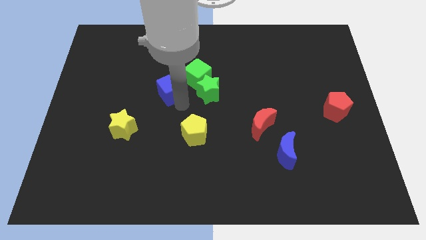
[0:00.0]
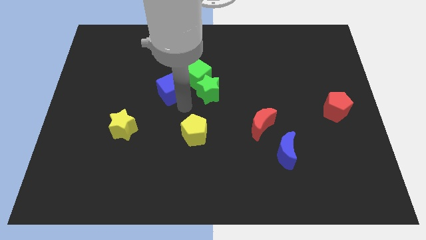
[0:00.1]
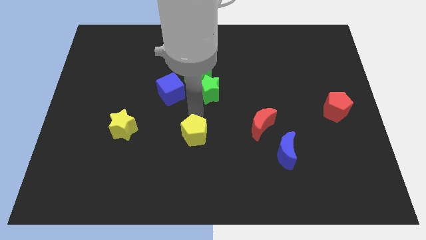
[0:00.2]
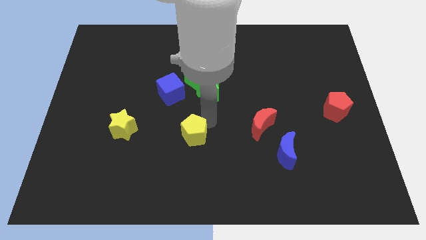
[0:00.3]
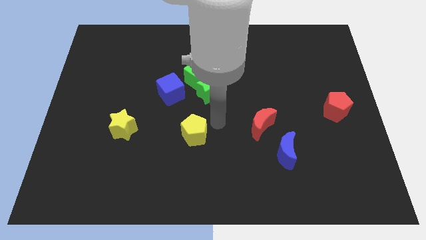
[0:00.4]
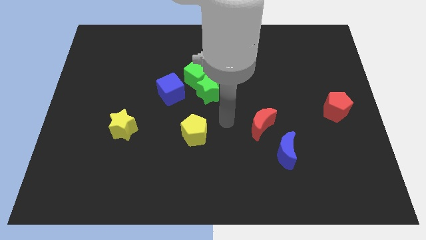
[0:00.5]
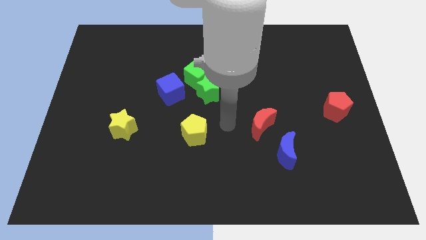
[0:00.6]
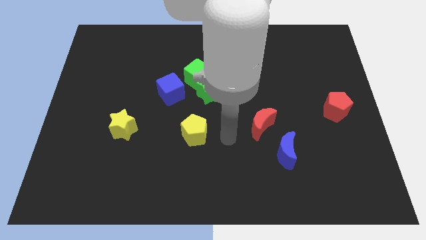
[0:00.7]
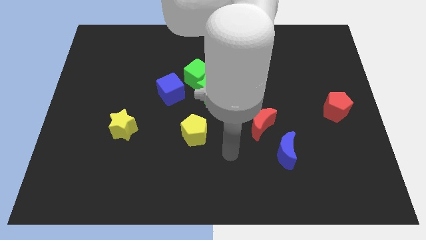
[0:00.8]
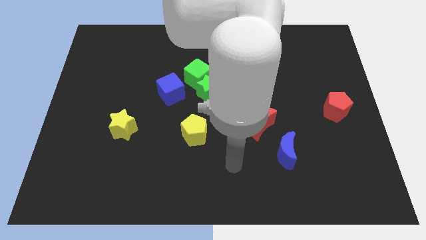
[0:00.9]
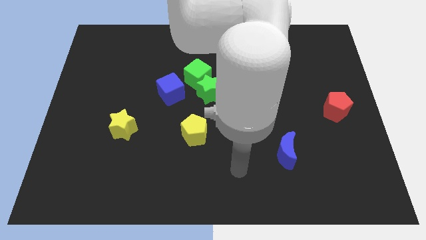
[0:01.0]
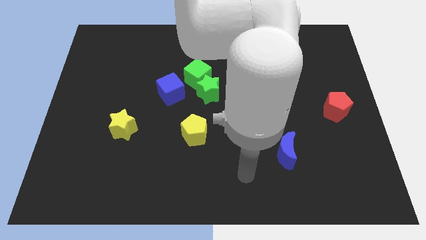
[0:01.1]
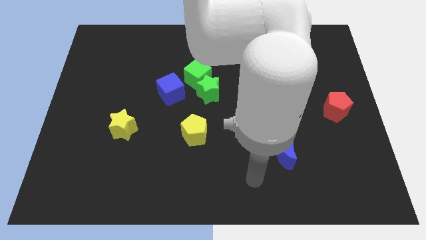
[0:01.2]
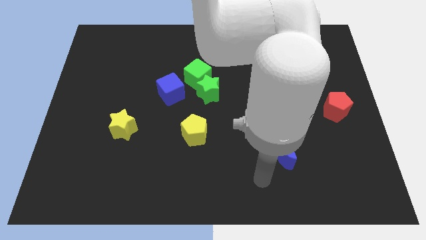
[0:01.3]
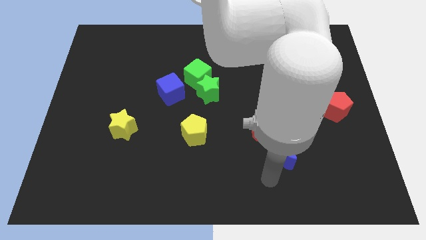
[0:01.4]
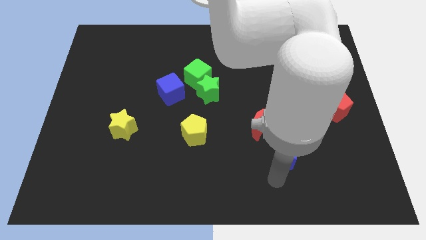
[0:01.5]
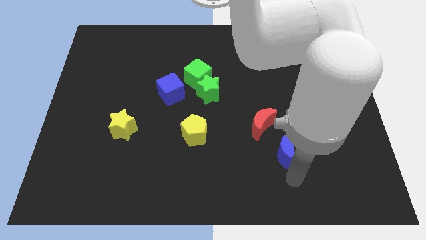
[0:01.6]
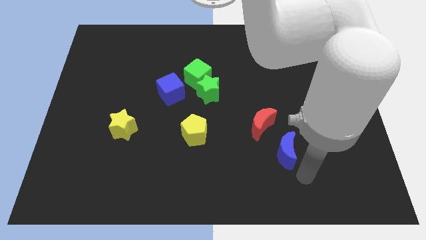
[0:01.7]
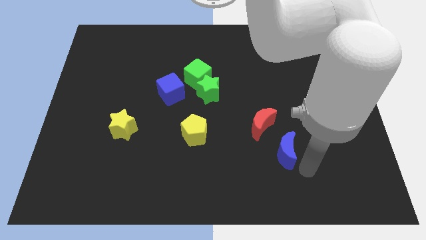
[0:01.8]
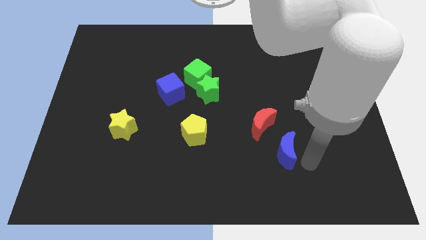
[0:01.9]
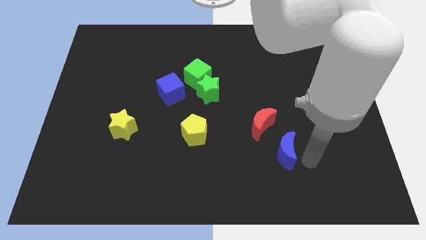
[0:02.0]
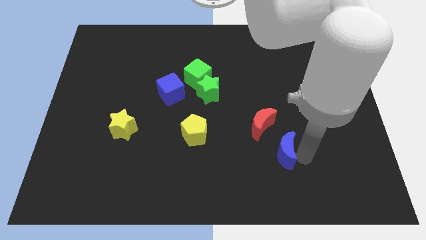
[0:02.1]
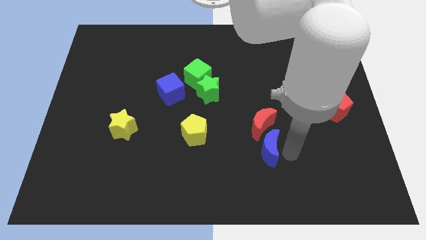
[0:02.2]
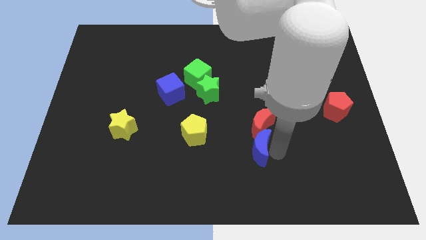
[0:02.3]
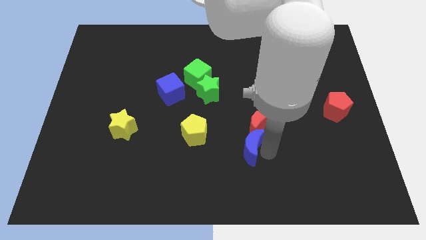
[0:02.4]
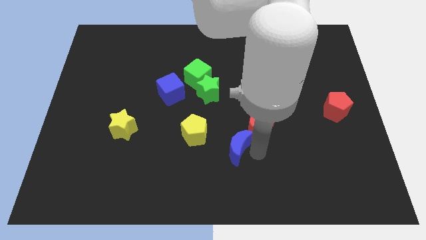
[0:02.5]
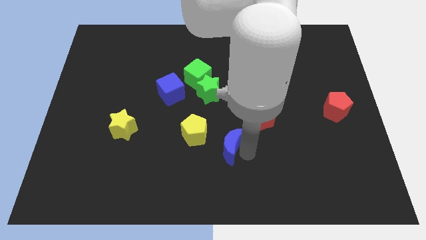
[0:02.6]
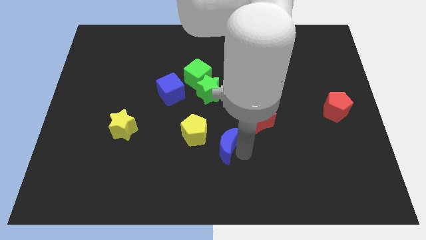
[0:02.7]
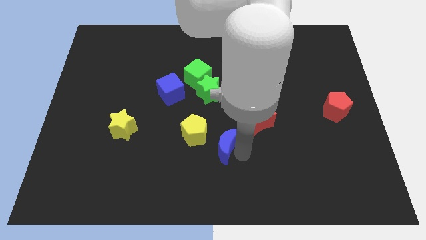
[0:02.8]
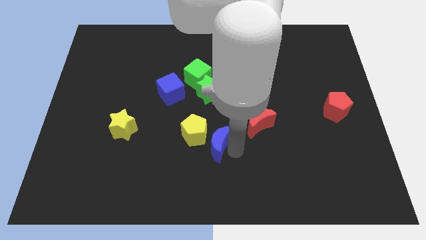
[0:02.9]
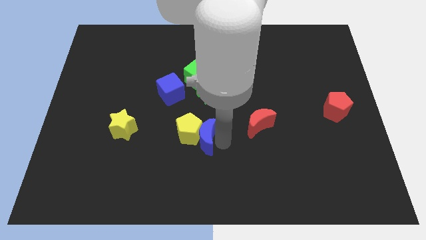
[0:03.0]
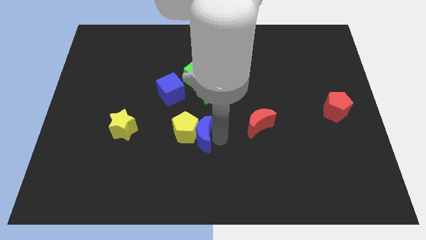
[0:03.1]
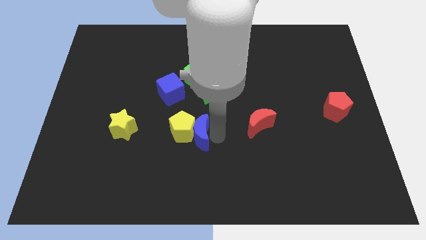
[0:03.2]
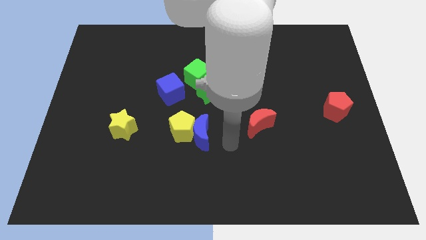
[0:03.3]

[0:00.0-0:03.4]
push the blue moon into the yellow pentagon

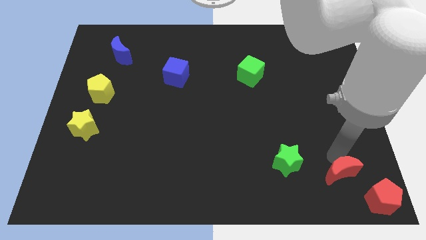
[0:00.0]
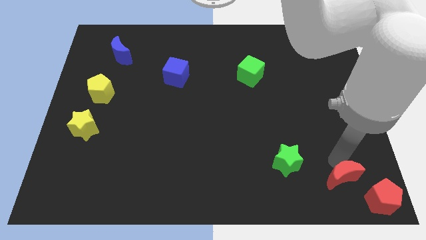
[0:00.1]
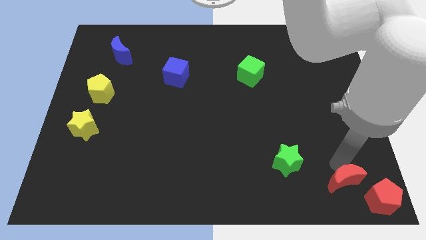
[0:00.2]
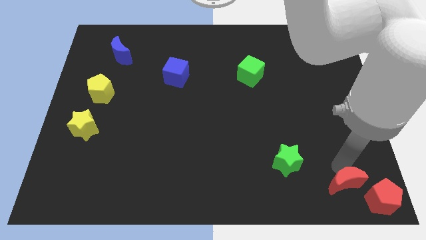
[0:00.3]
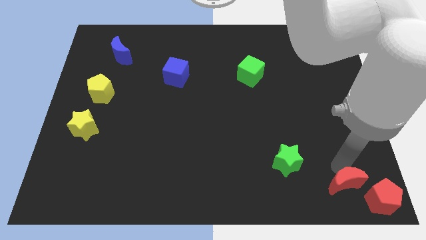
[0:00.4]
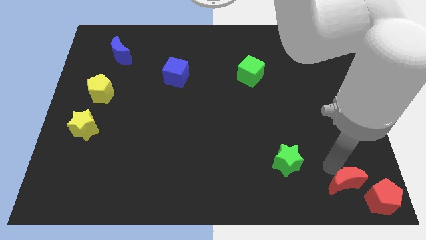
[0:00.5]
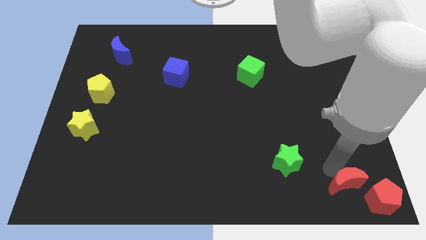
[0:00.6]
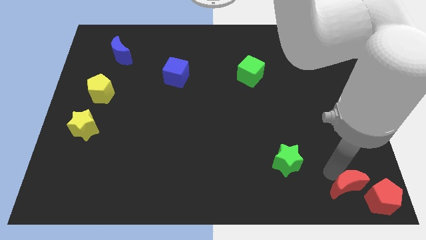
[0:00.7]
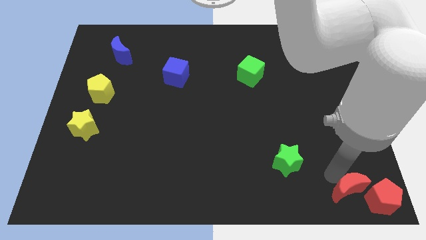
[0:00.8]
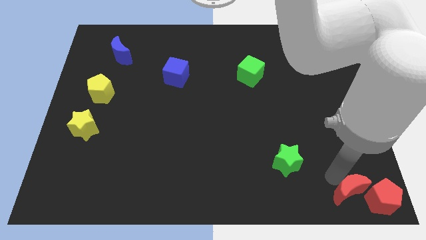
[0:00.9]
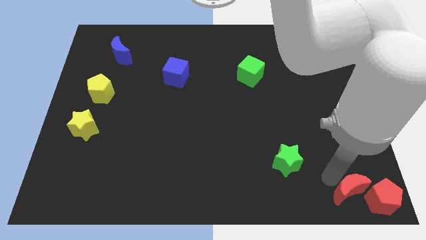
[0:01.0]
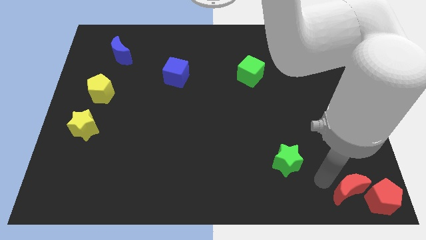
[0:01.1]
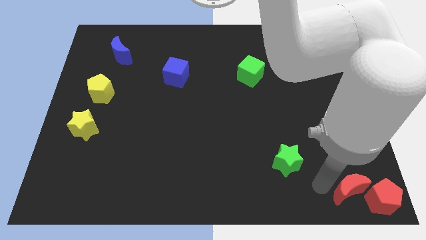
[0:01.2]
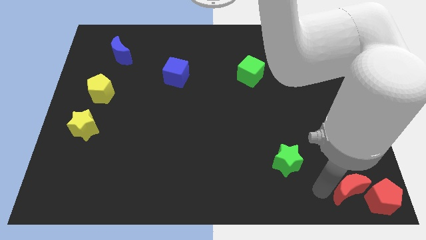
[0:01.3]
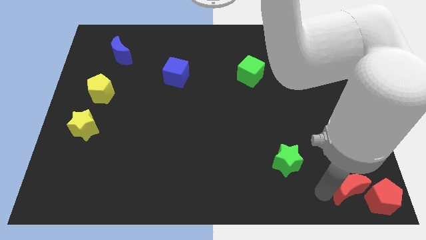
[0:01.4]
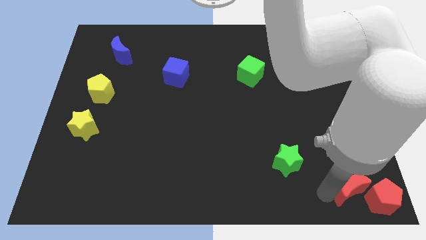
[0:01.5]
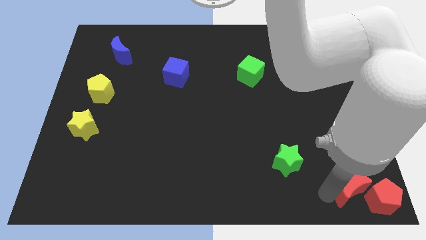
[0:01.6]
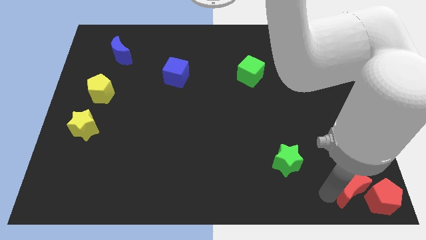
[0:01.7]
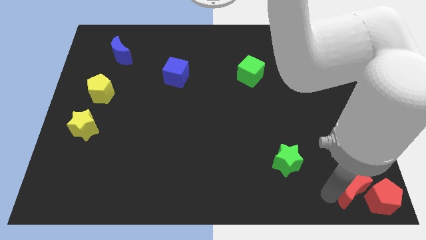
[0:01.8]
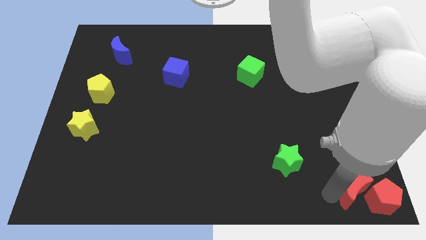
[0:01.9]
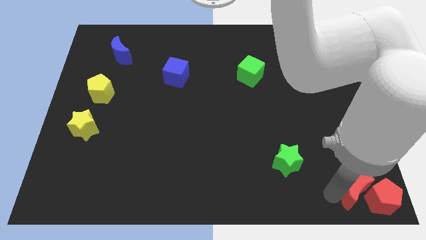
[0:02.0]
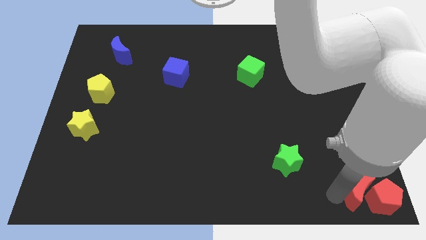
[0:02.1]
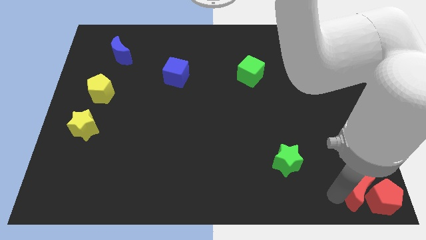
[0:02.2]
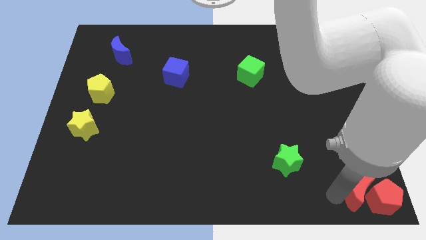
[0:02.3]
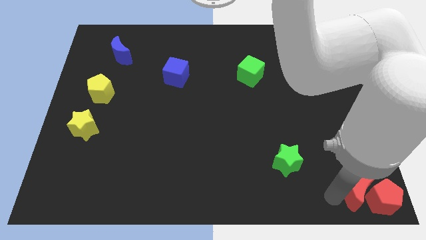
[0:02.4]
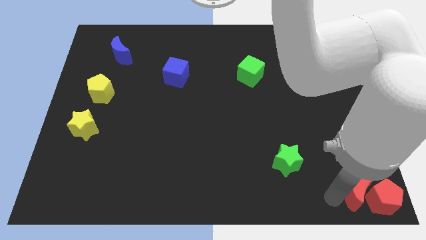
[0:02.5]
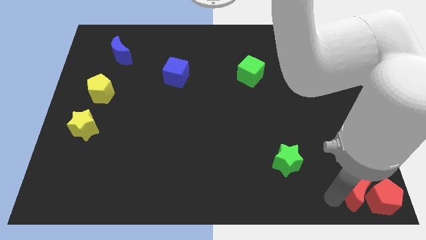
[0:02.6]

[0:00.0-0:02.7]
drag the red moon into the left side of the red pentagon

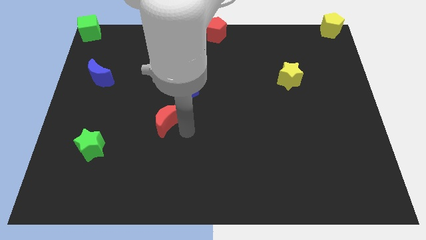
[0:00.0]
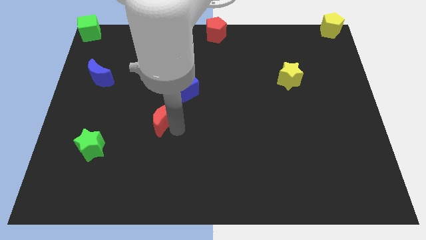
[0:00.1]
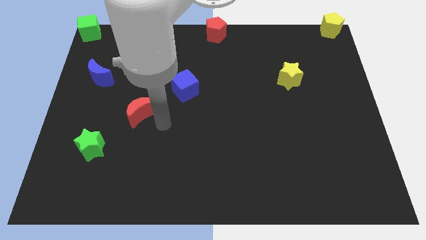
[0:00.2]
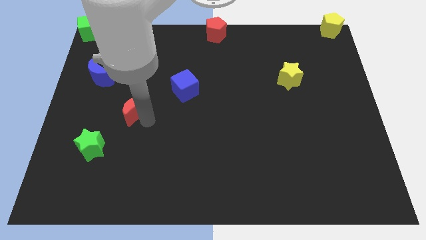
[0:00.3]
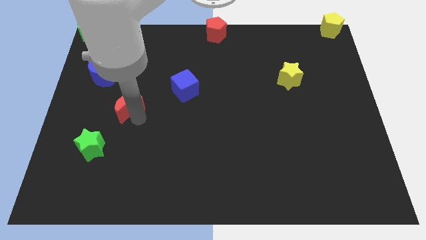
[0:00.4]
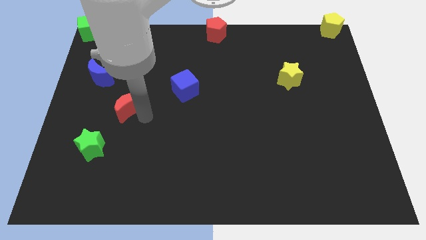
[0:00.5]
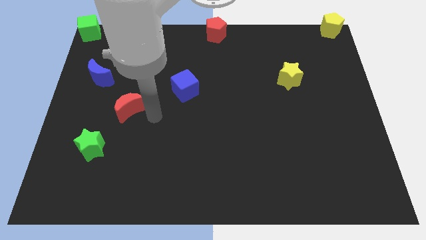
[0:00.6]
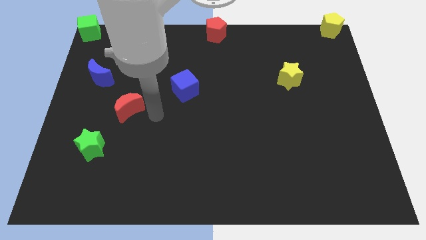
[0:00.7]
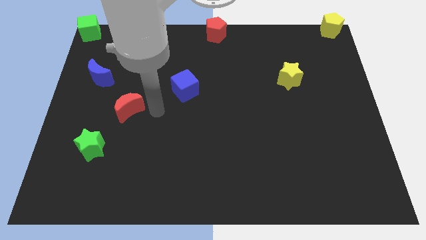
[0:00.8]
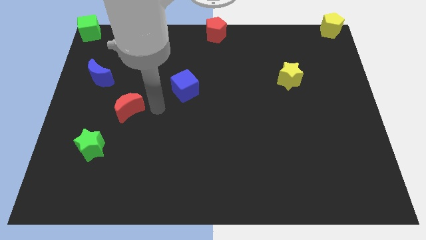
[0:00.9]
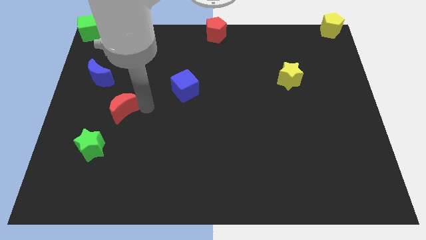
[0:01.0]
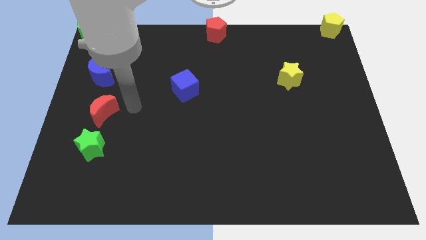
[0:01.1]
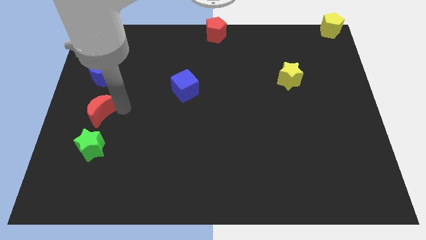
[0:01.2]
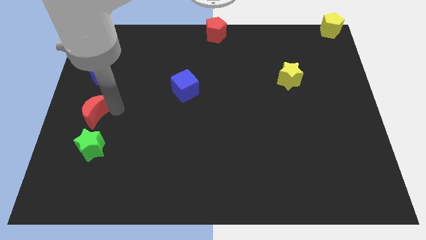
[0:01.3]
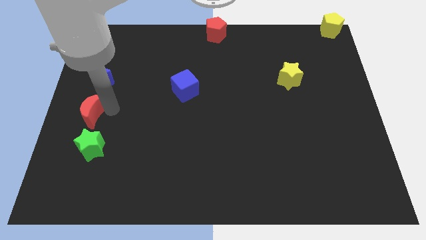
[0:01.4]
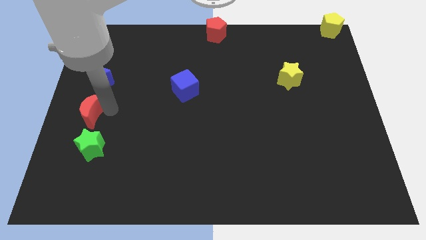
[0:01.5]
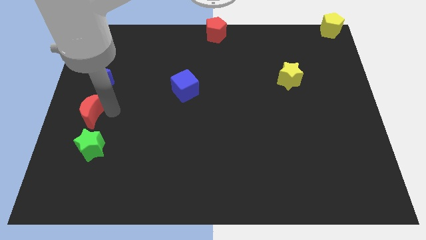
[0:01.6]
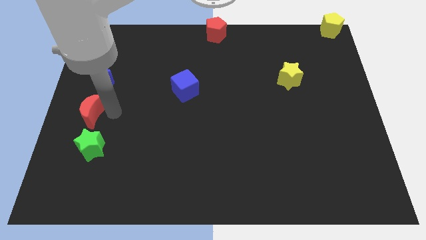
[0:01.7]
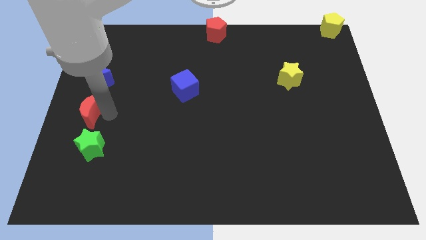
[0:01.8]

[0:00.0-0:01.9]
push the red crescent in between the green star and blue crescent

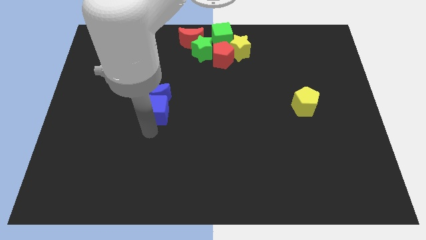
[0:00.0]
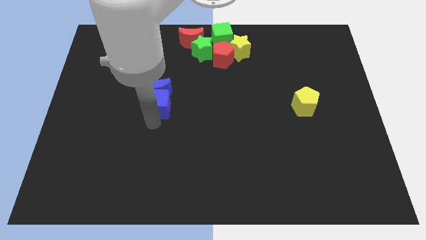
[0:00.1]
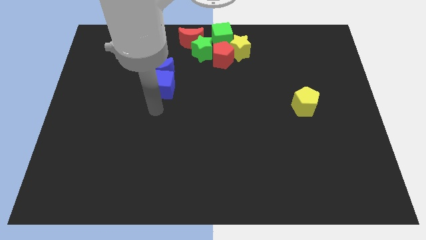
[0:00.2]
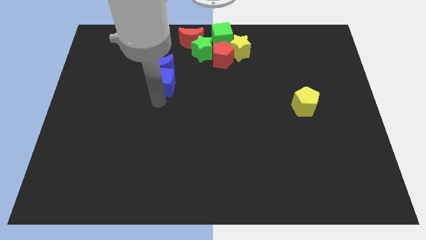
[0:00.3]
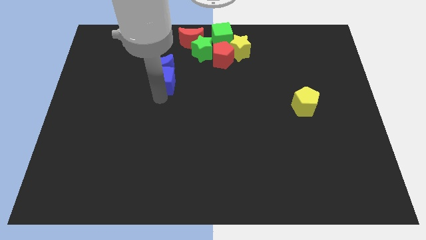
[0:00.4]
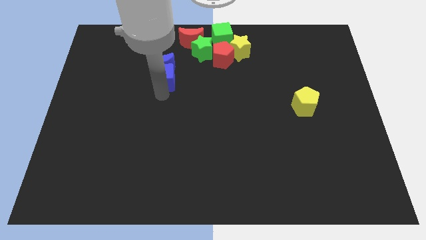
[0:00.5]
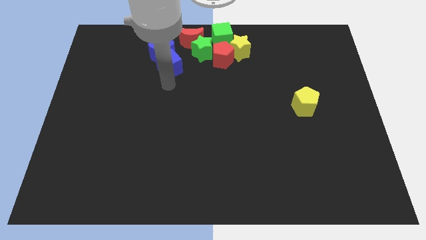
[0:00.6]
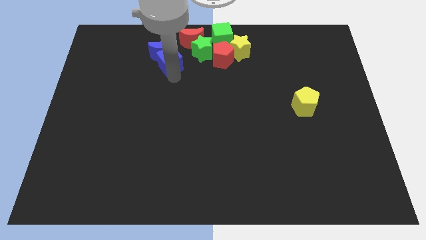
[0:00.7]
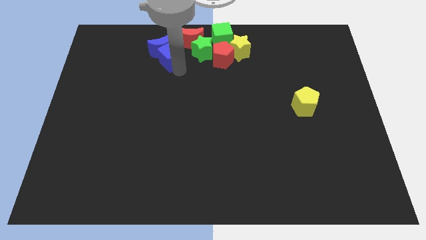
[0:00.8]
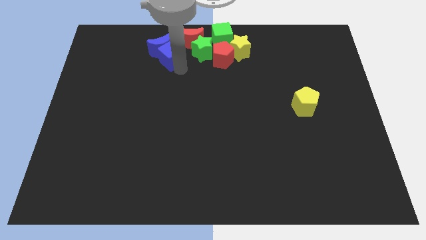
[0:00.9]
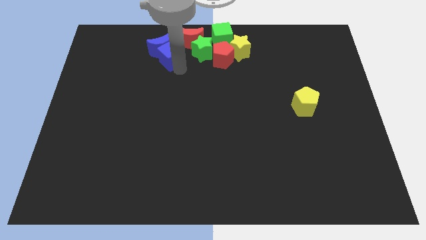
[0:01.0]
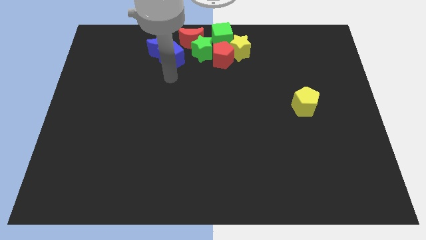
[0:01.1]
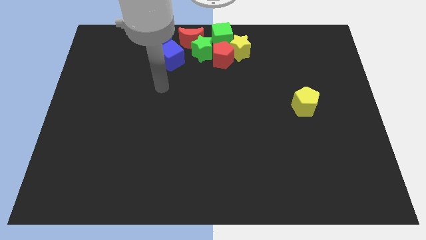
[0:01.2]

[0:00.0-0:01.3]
move the blue cube along with the blue crescent to the top center of the board
